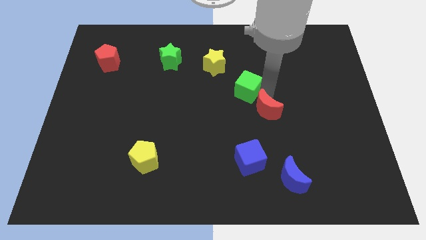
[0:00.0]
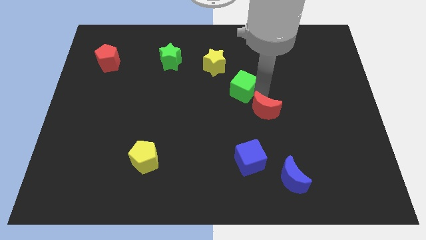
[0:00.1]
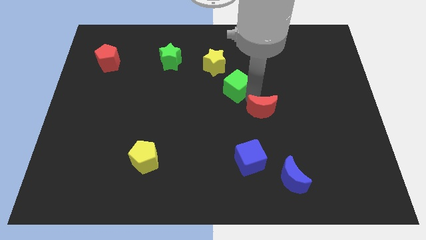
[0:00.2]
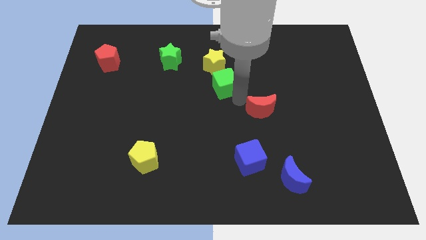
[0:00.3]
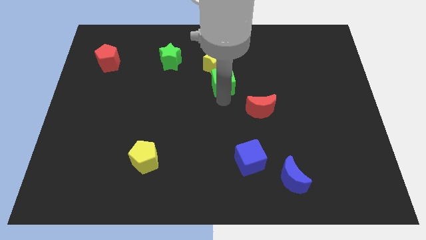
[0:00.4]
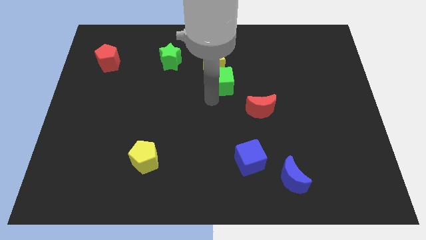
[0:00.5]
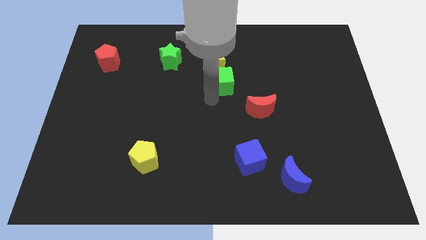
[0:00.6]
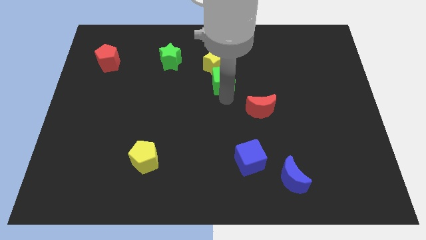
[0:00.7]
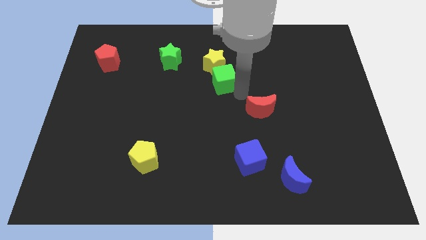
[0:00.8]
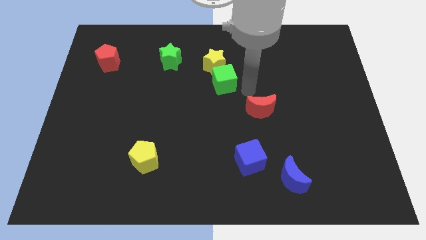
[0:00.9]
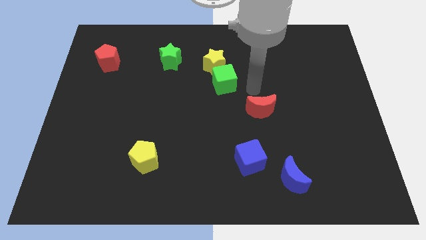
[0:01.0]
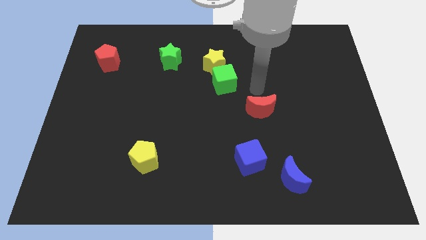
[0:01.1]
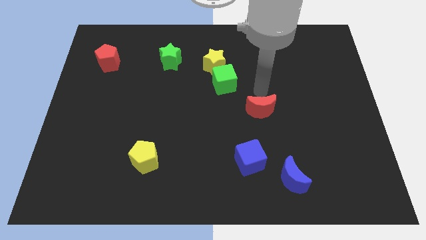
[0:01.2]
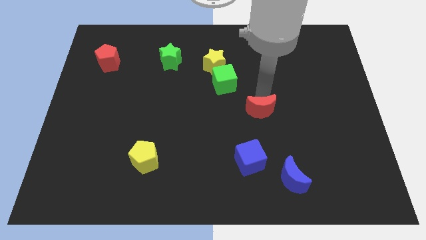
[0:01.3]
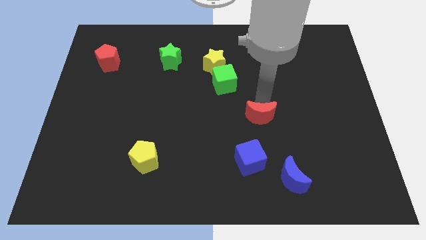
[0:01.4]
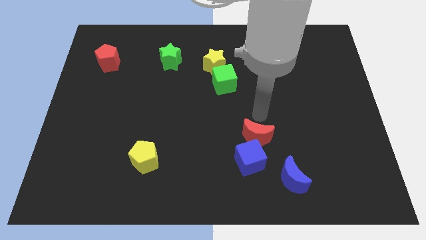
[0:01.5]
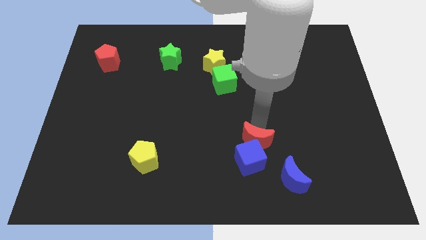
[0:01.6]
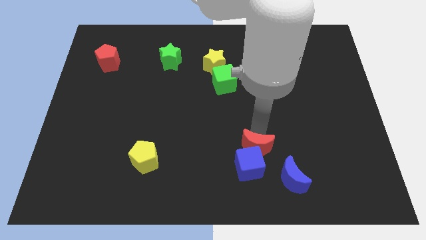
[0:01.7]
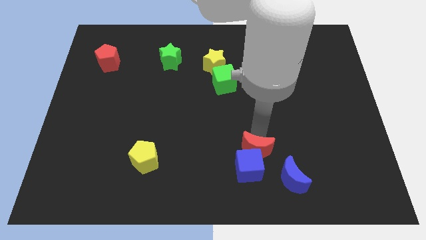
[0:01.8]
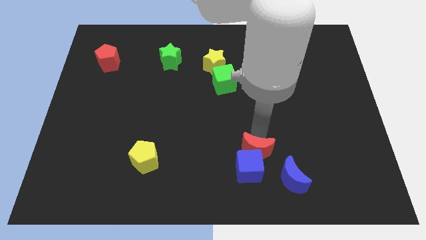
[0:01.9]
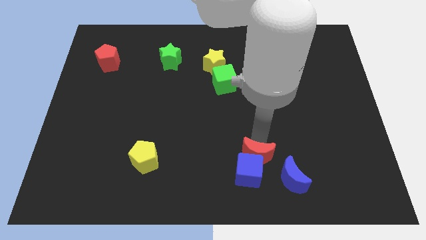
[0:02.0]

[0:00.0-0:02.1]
separate the green cube and red moon

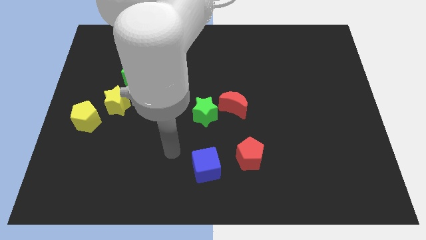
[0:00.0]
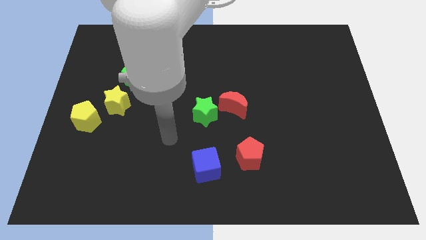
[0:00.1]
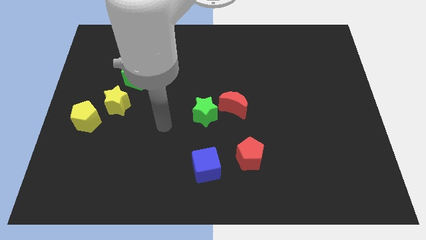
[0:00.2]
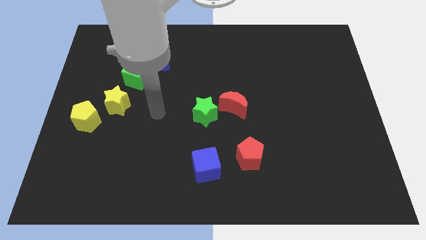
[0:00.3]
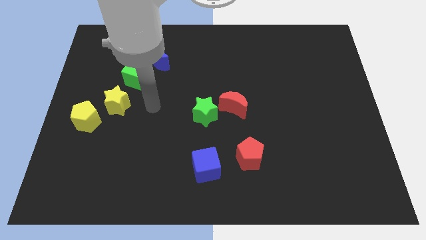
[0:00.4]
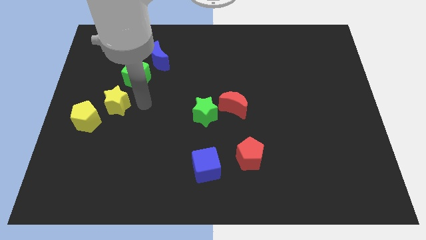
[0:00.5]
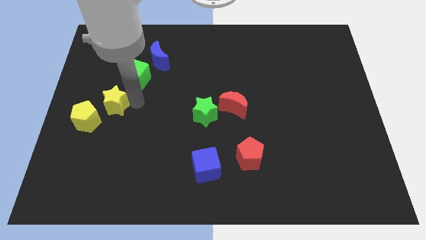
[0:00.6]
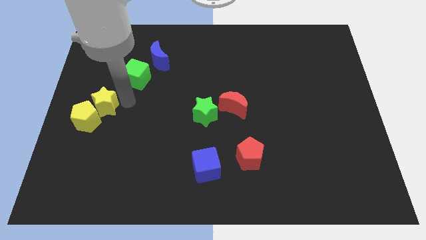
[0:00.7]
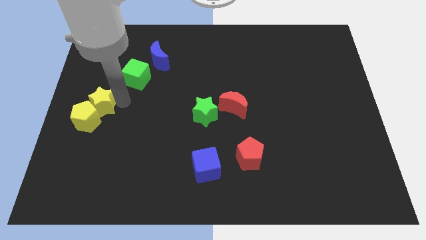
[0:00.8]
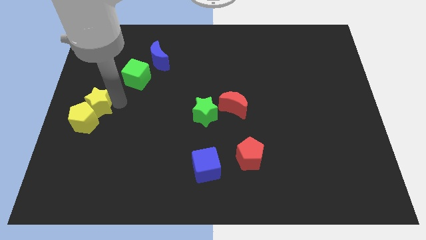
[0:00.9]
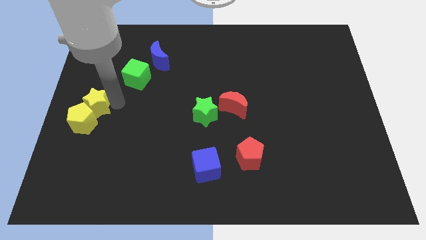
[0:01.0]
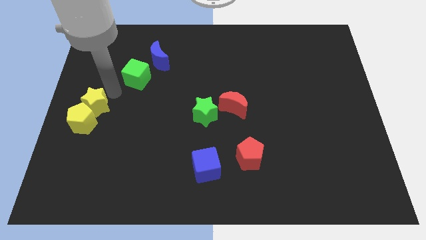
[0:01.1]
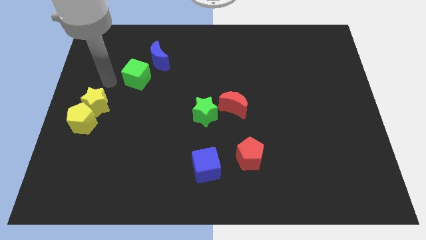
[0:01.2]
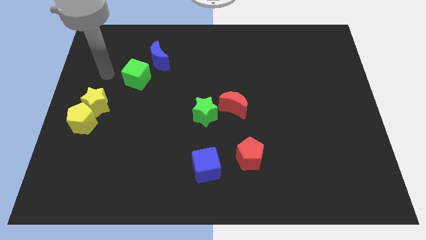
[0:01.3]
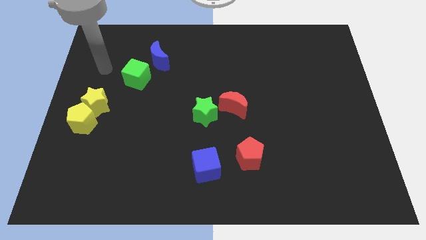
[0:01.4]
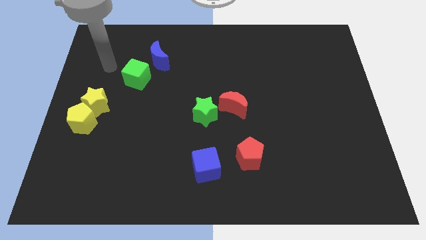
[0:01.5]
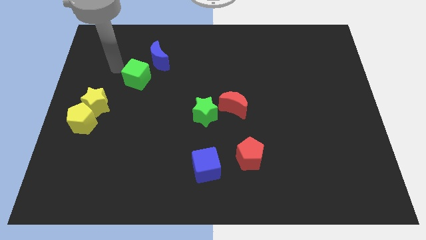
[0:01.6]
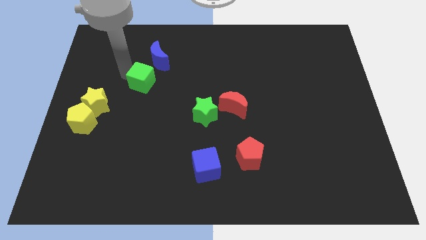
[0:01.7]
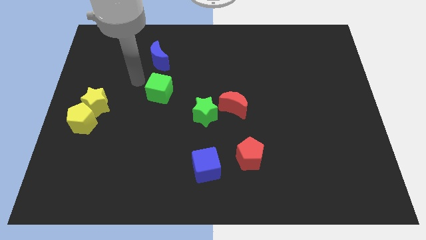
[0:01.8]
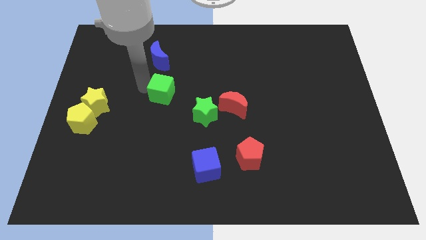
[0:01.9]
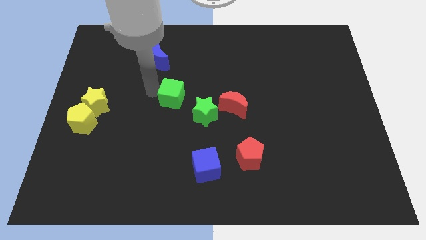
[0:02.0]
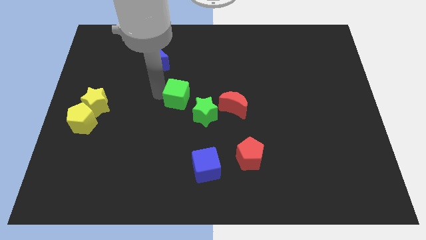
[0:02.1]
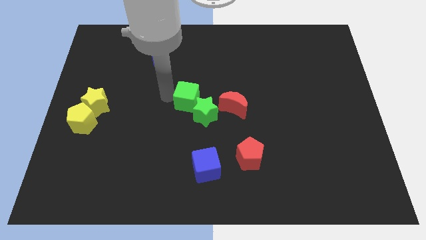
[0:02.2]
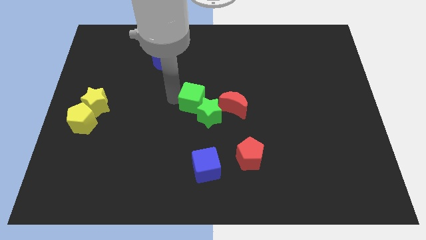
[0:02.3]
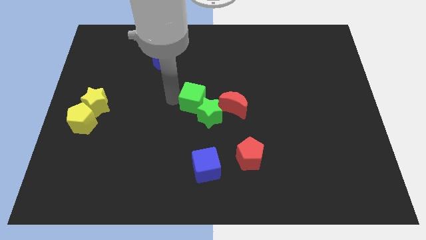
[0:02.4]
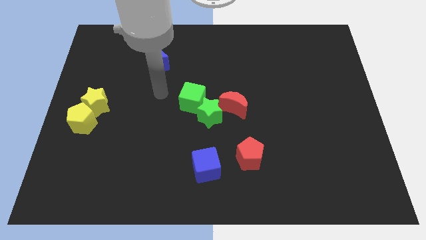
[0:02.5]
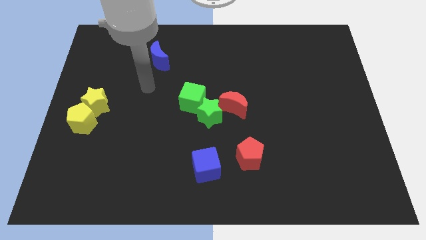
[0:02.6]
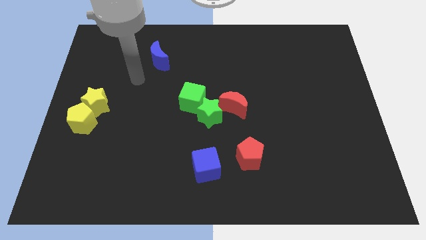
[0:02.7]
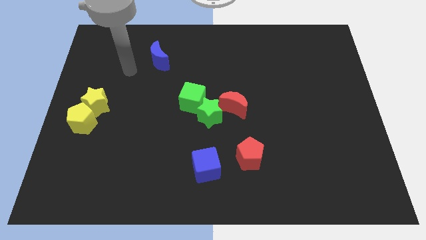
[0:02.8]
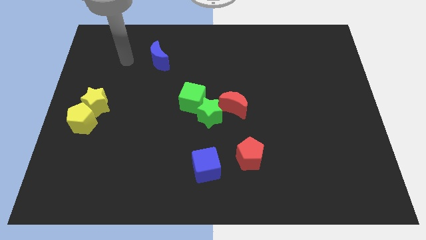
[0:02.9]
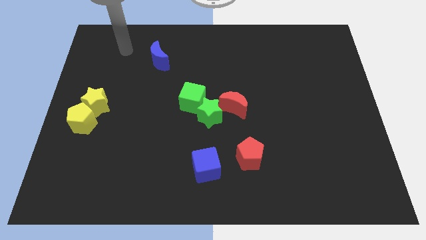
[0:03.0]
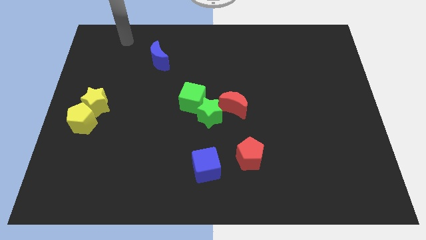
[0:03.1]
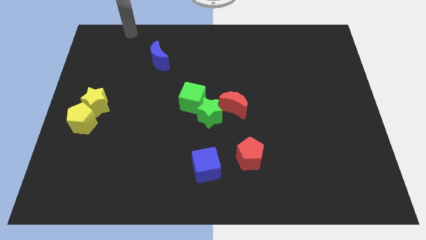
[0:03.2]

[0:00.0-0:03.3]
push the green cube to the left of the green star

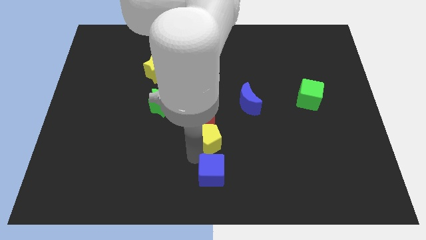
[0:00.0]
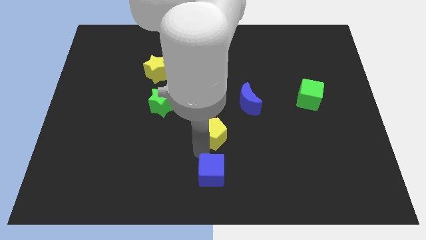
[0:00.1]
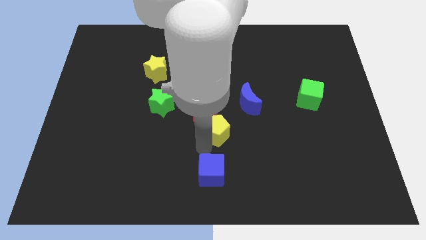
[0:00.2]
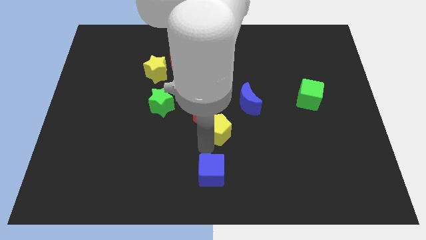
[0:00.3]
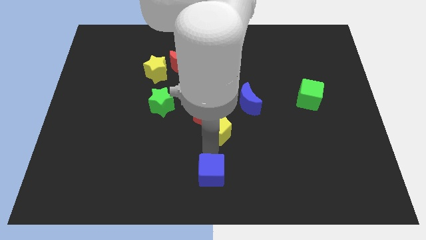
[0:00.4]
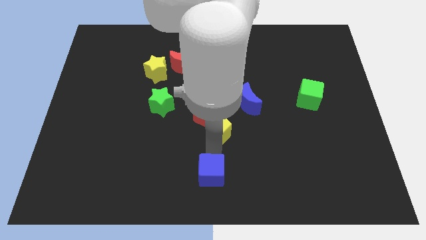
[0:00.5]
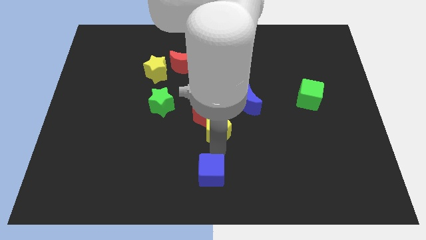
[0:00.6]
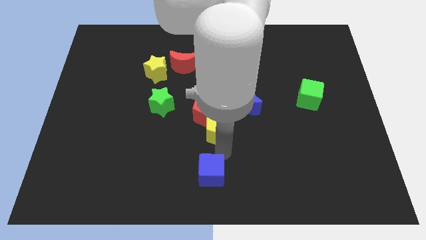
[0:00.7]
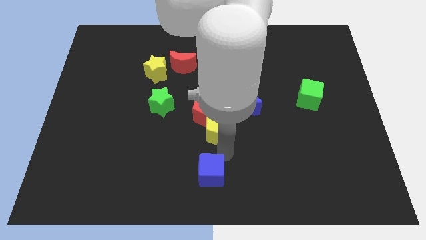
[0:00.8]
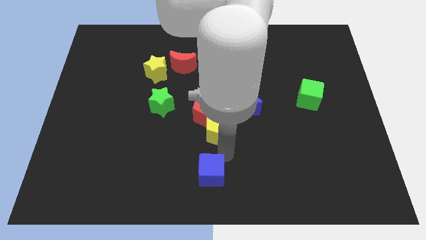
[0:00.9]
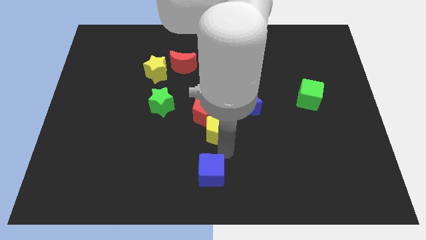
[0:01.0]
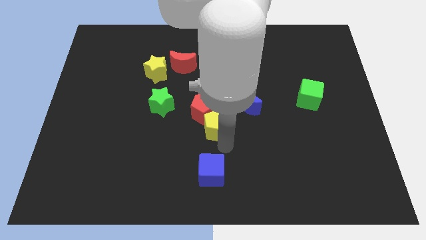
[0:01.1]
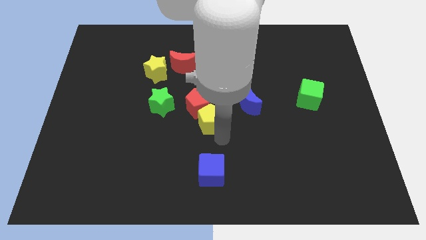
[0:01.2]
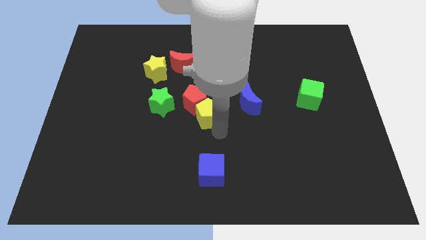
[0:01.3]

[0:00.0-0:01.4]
push yellow pentagon in to red pentagon

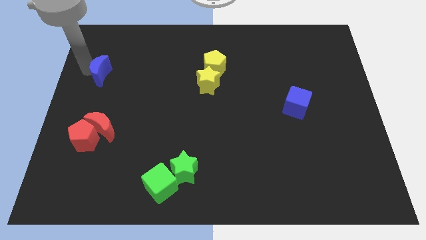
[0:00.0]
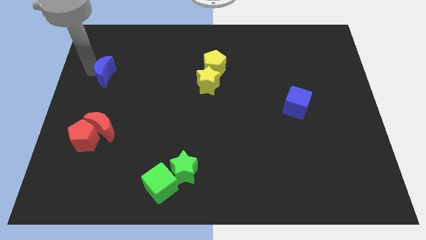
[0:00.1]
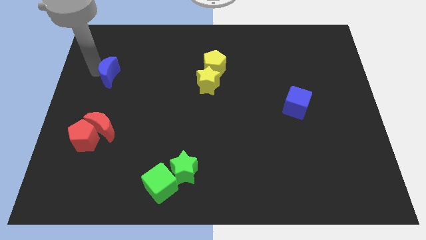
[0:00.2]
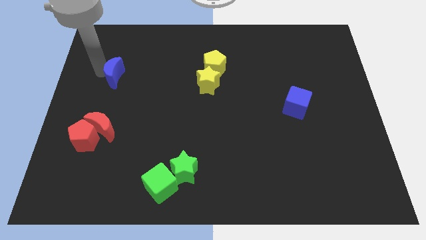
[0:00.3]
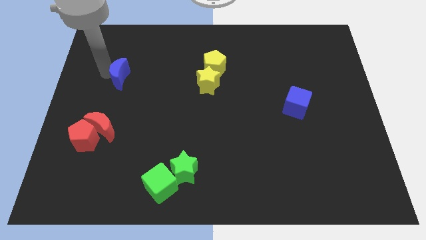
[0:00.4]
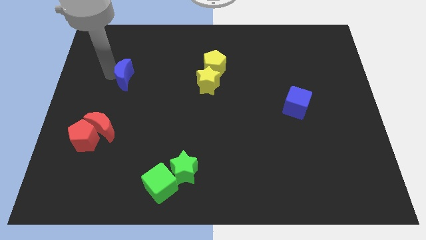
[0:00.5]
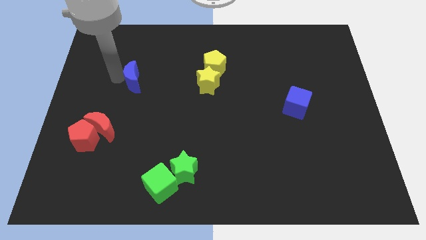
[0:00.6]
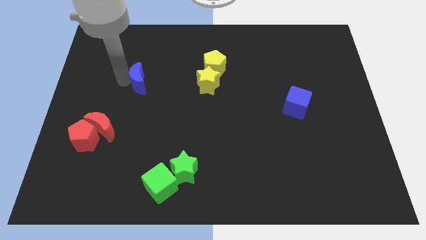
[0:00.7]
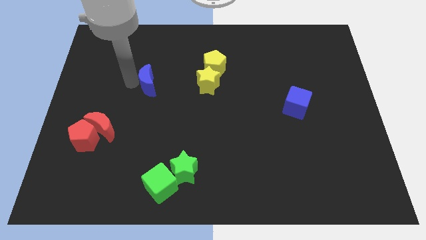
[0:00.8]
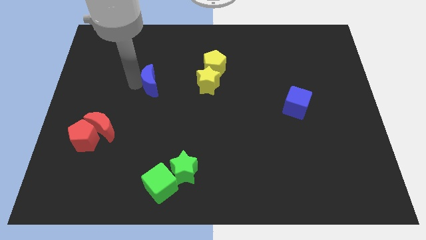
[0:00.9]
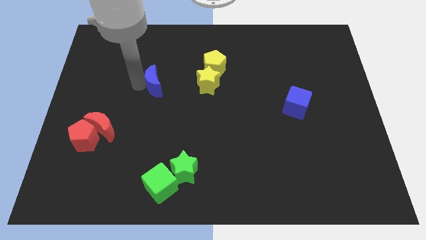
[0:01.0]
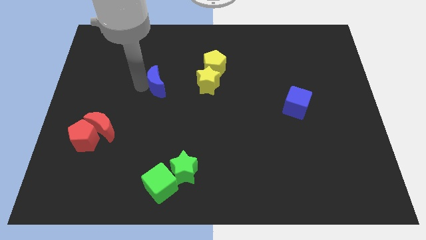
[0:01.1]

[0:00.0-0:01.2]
push the blue moon closer to the yellow star

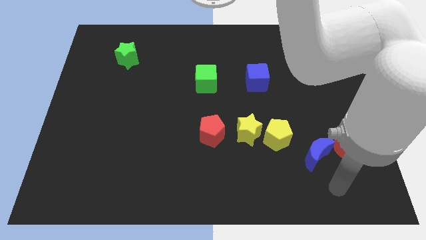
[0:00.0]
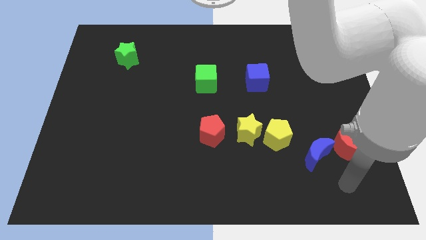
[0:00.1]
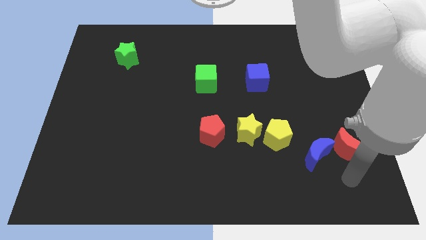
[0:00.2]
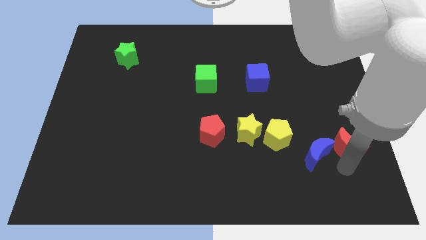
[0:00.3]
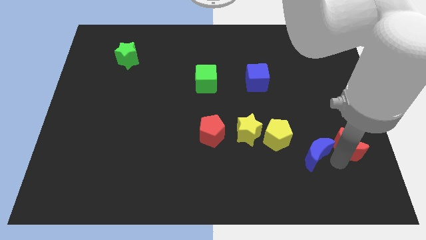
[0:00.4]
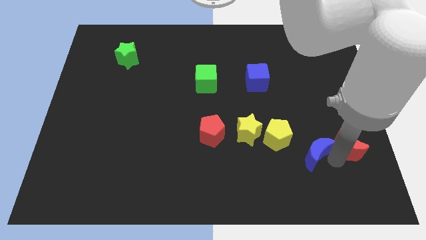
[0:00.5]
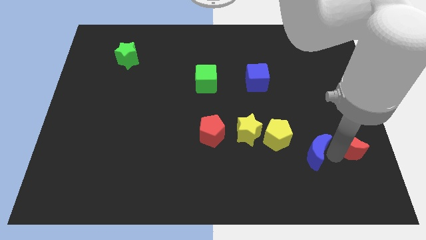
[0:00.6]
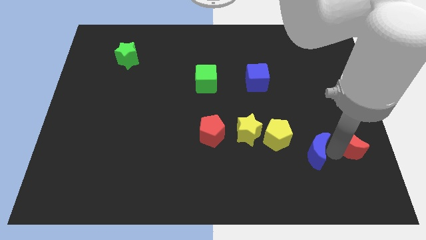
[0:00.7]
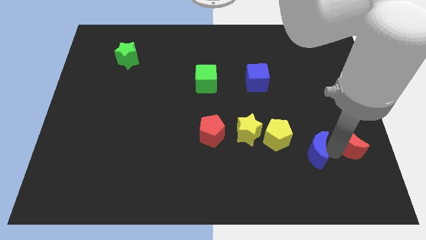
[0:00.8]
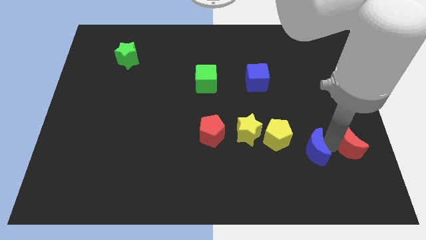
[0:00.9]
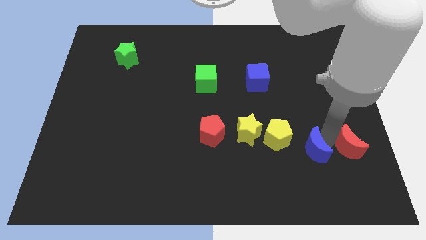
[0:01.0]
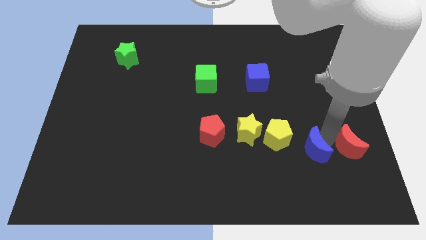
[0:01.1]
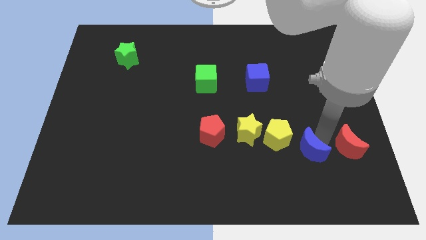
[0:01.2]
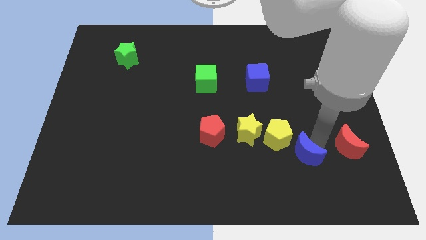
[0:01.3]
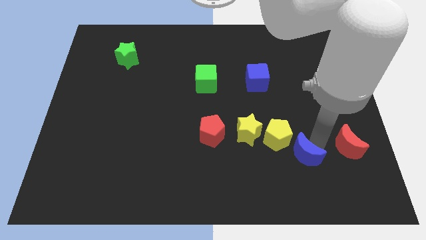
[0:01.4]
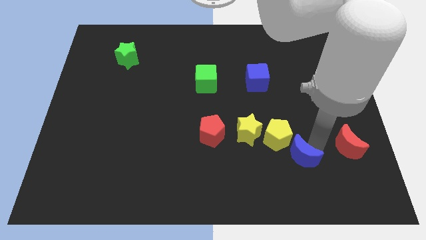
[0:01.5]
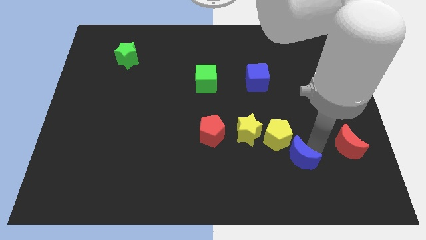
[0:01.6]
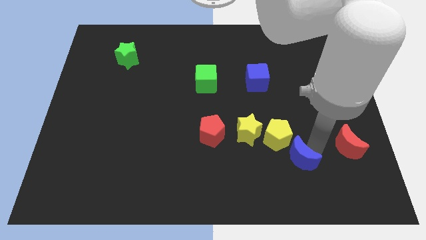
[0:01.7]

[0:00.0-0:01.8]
separate the blue crescent from the red crescent
